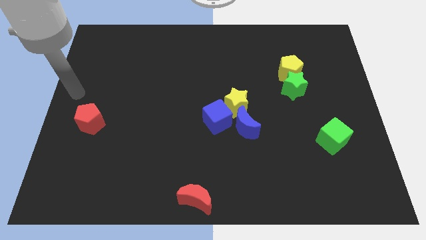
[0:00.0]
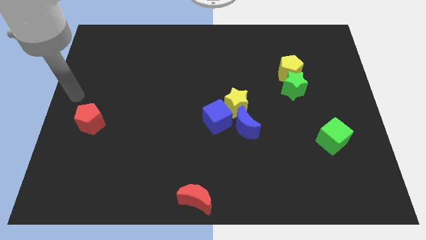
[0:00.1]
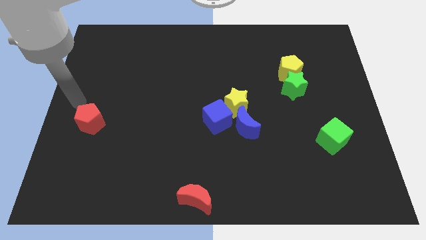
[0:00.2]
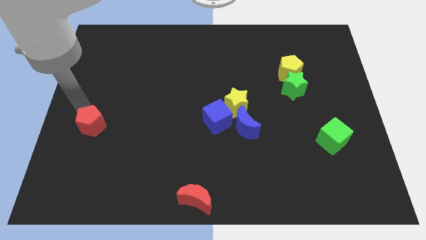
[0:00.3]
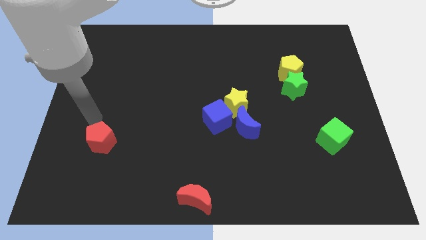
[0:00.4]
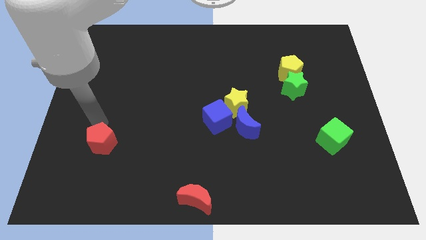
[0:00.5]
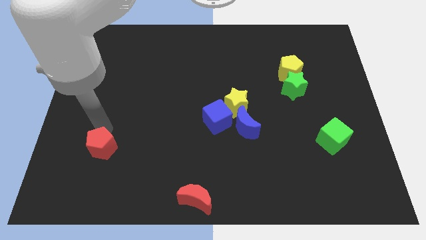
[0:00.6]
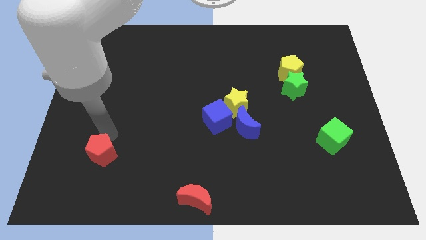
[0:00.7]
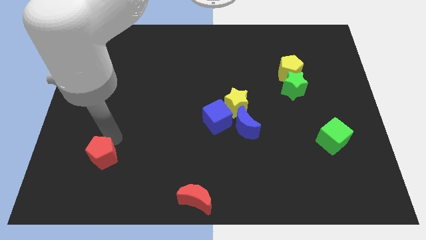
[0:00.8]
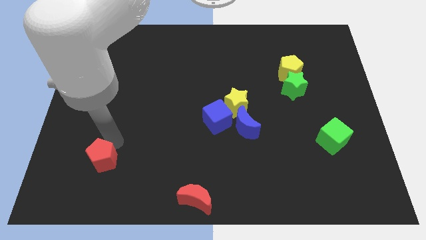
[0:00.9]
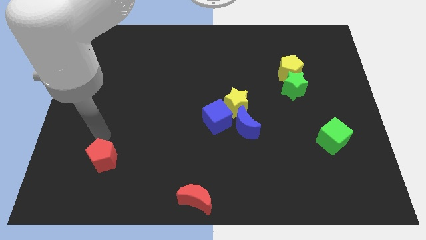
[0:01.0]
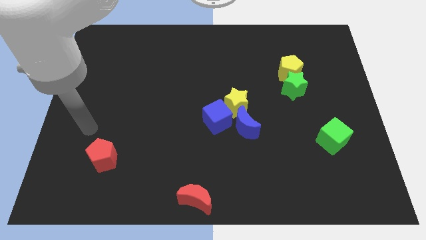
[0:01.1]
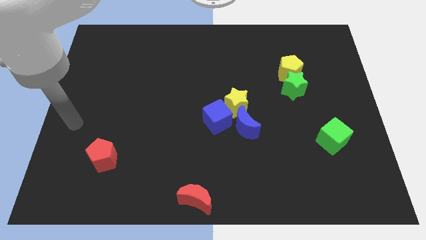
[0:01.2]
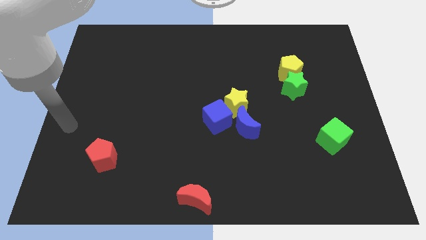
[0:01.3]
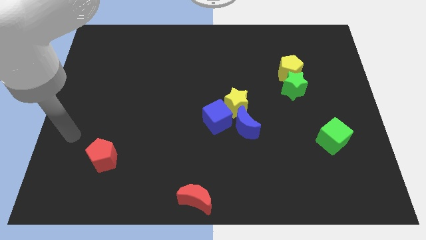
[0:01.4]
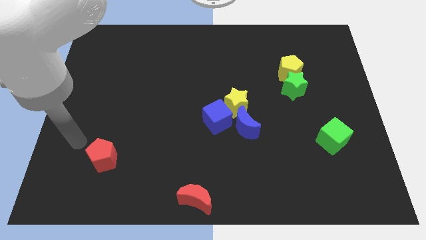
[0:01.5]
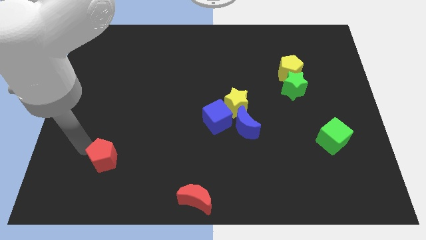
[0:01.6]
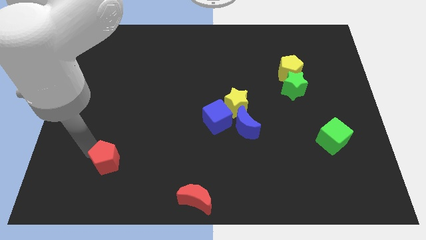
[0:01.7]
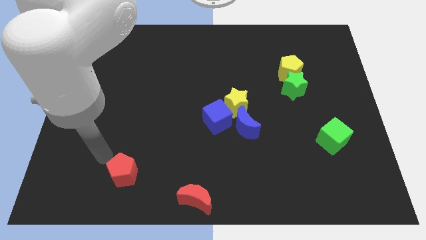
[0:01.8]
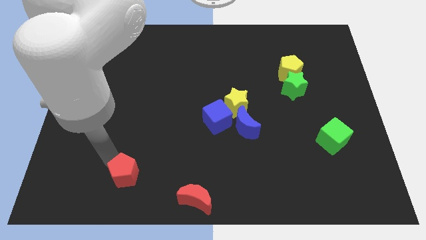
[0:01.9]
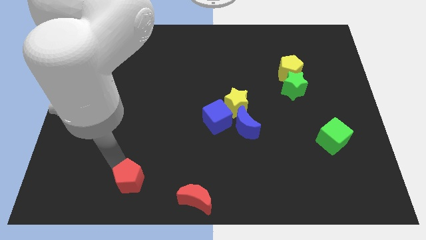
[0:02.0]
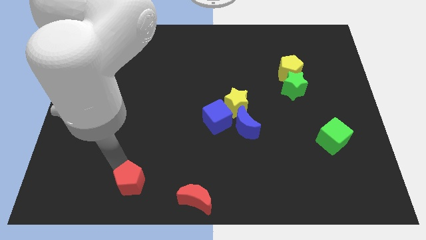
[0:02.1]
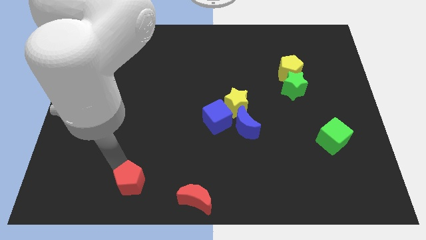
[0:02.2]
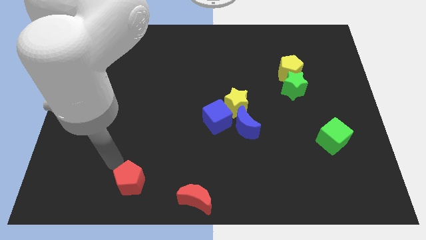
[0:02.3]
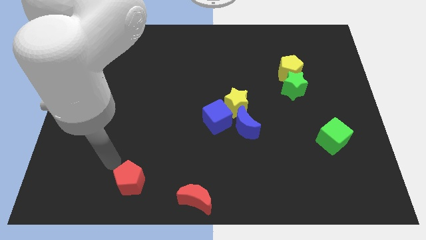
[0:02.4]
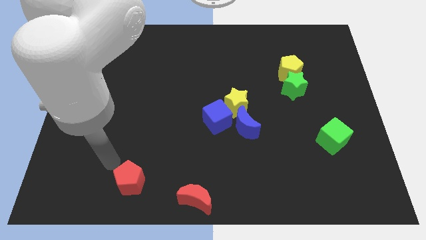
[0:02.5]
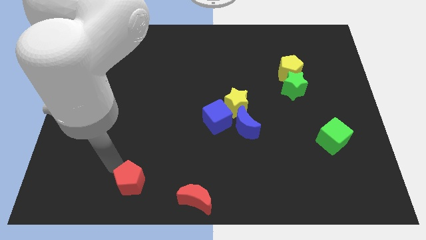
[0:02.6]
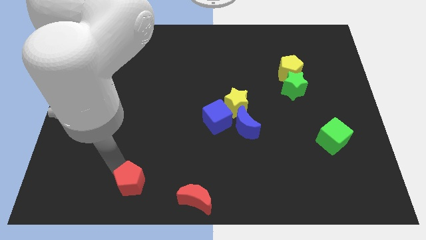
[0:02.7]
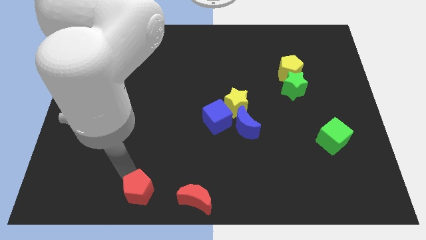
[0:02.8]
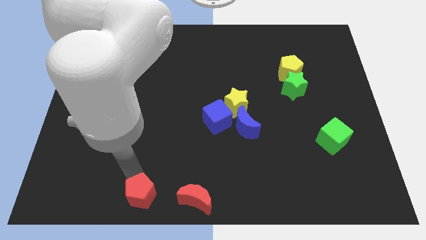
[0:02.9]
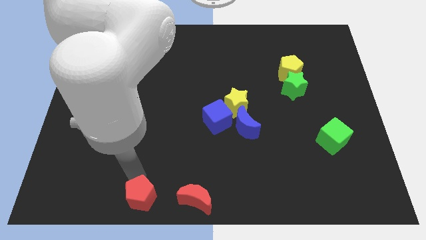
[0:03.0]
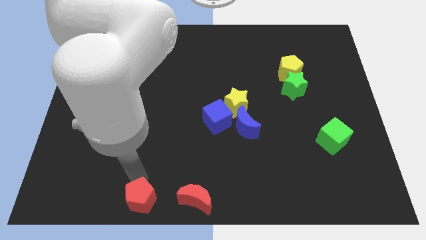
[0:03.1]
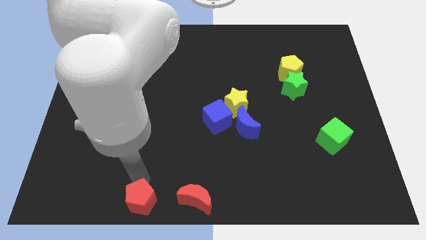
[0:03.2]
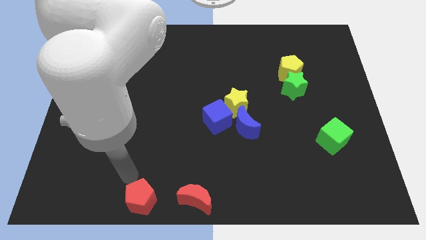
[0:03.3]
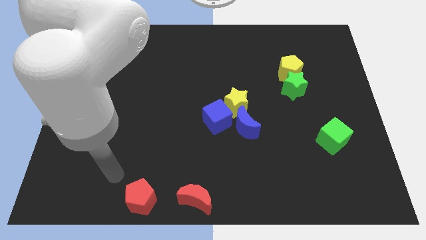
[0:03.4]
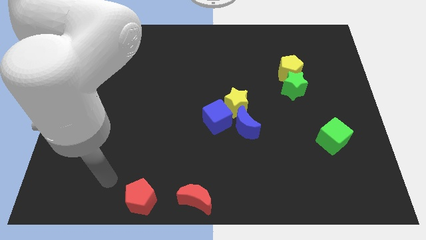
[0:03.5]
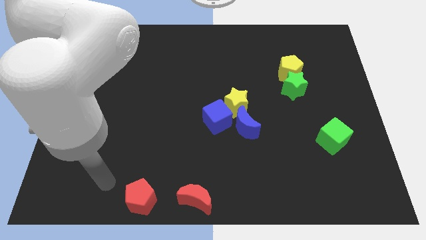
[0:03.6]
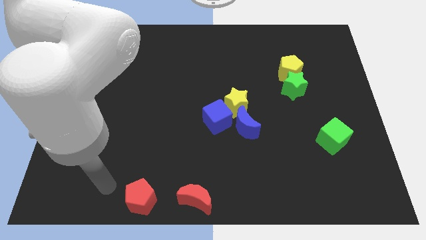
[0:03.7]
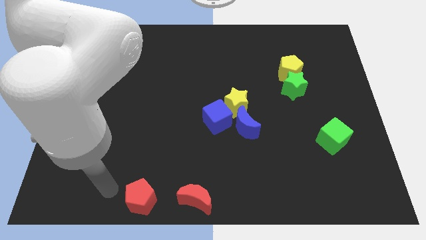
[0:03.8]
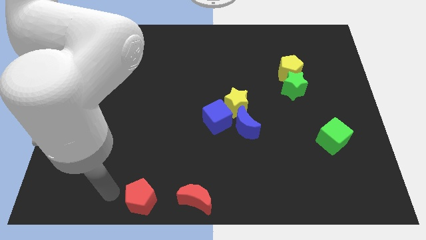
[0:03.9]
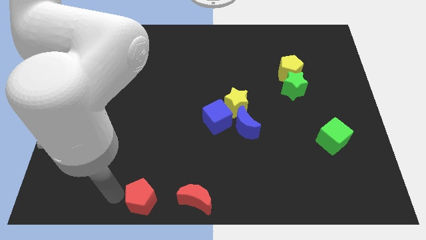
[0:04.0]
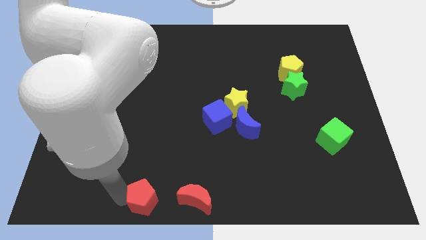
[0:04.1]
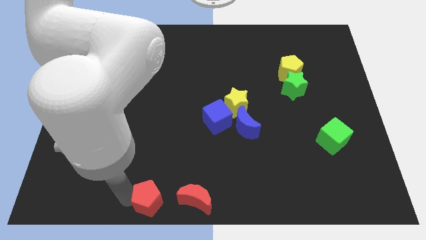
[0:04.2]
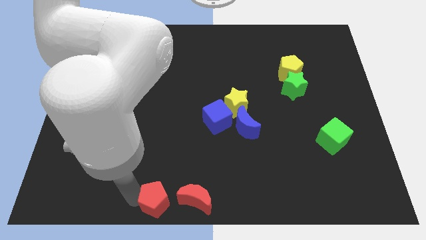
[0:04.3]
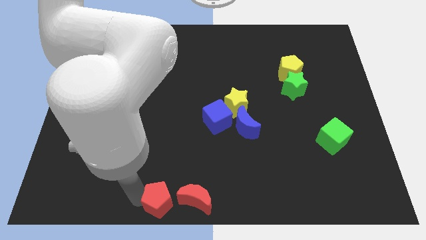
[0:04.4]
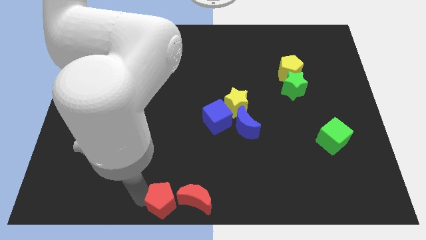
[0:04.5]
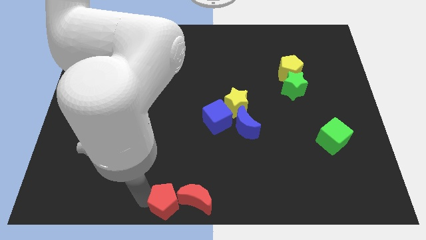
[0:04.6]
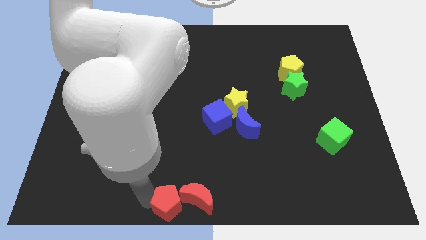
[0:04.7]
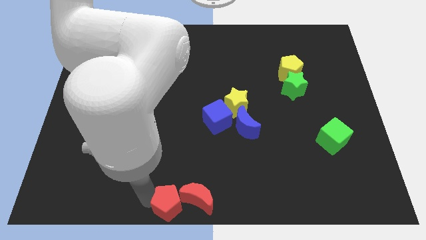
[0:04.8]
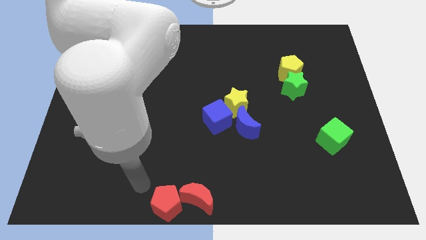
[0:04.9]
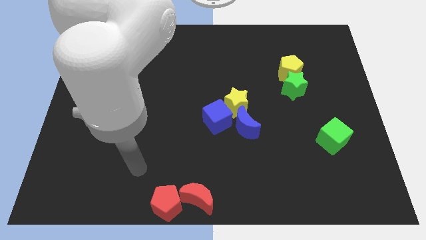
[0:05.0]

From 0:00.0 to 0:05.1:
put the red pentagon into red moon at the bottom center

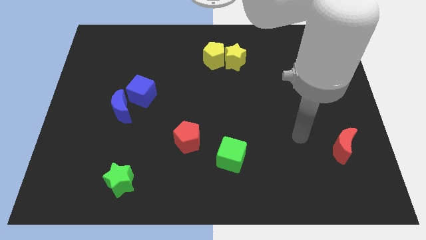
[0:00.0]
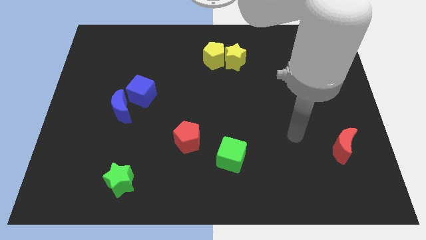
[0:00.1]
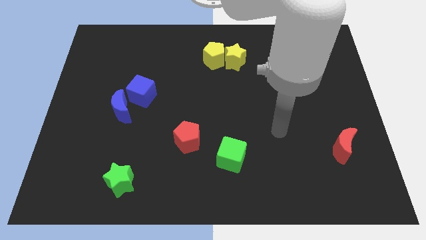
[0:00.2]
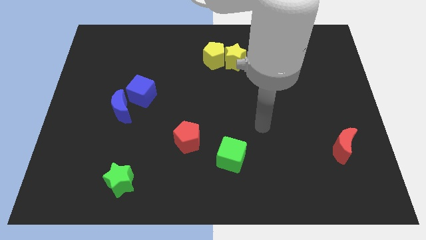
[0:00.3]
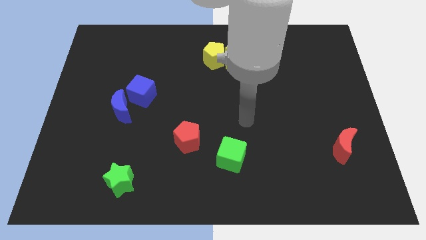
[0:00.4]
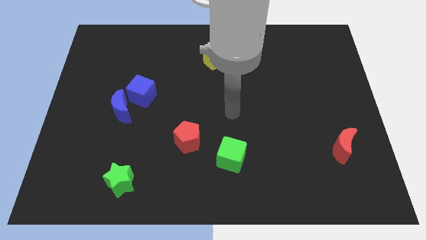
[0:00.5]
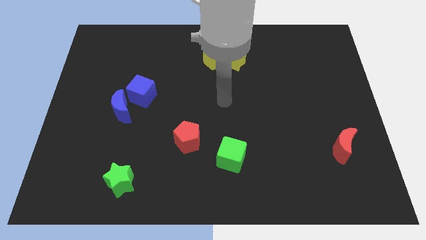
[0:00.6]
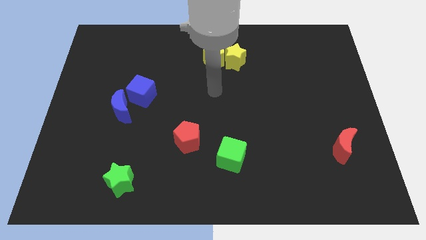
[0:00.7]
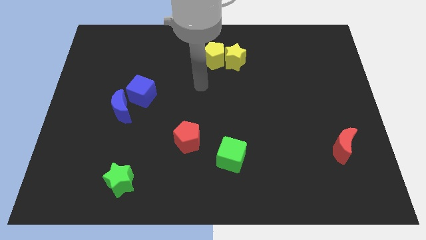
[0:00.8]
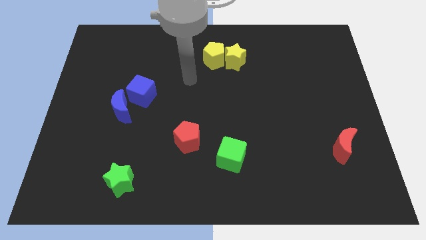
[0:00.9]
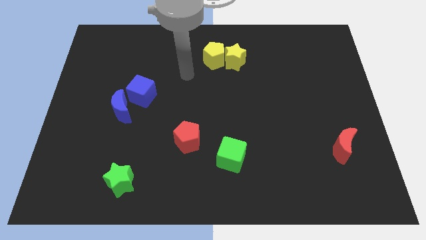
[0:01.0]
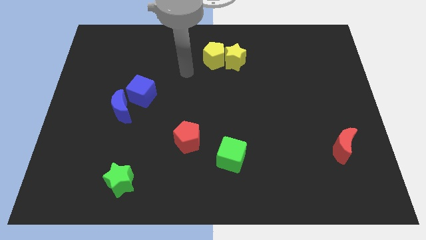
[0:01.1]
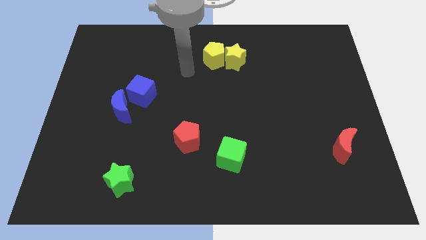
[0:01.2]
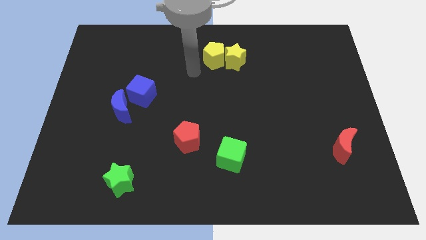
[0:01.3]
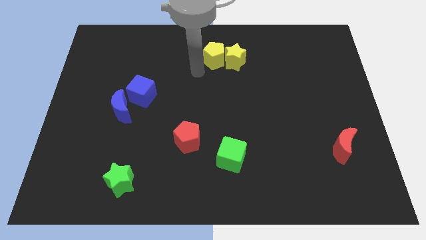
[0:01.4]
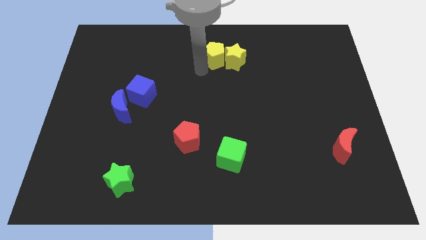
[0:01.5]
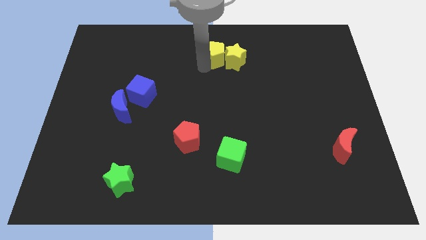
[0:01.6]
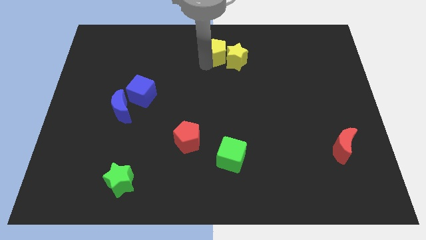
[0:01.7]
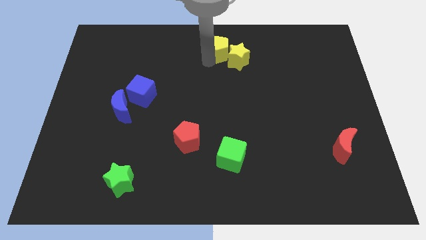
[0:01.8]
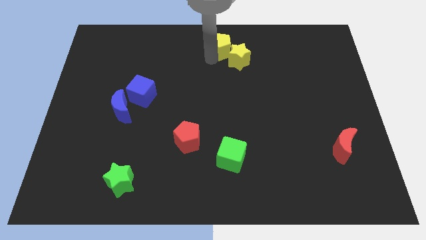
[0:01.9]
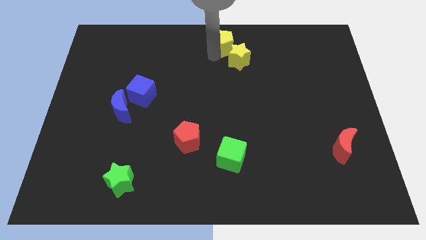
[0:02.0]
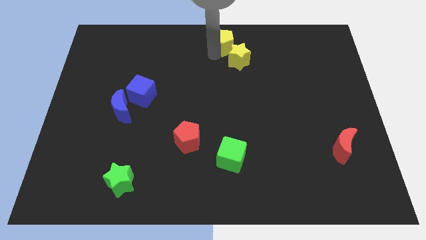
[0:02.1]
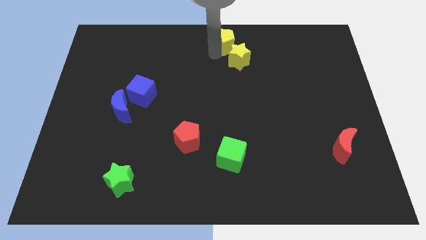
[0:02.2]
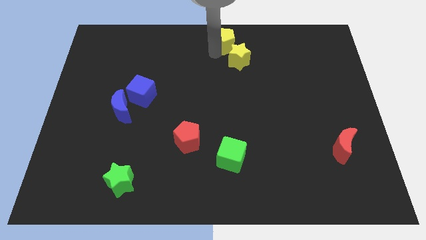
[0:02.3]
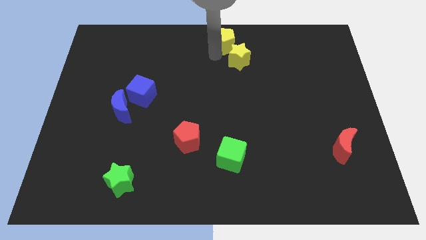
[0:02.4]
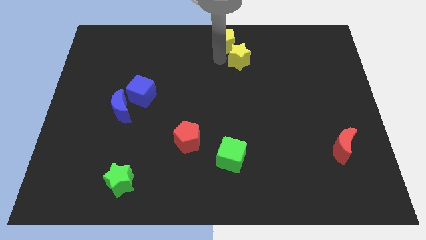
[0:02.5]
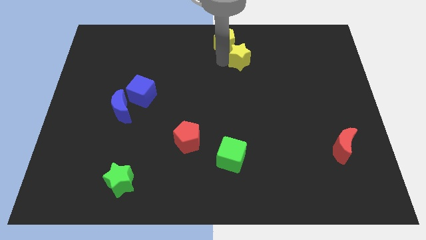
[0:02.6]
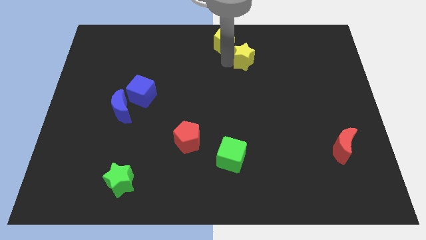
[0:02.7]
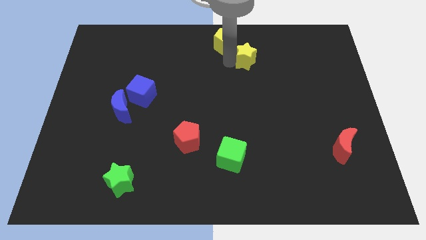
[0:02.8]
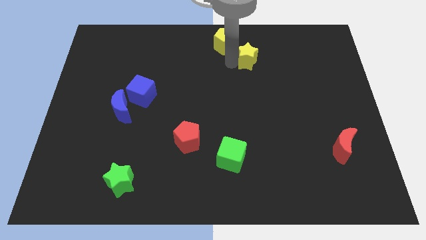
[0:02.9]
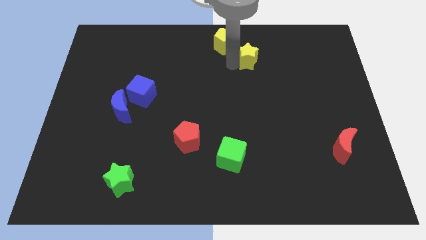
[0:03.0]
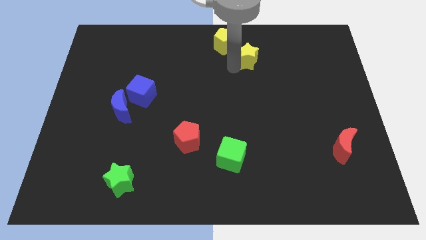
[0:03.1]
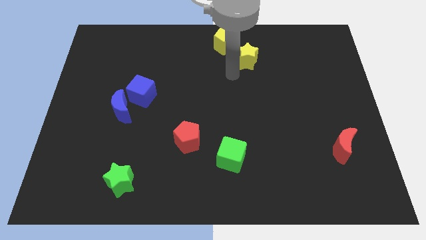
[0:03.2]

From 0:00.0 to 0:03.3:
separate yellow blocks away from each other

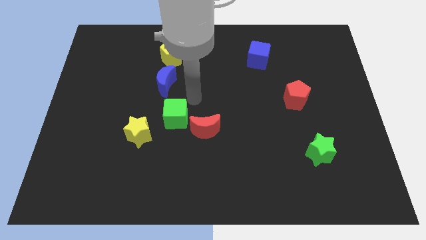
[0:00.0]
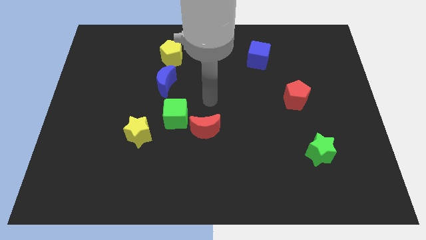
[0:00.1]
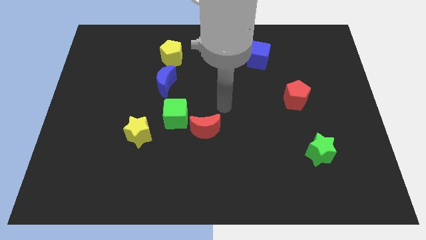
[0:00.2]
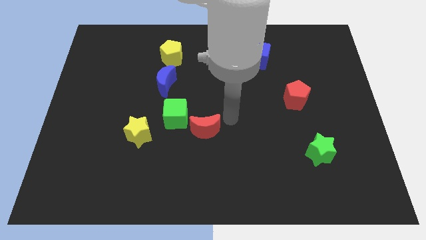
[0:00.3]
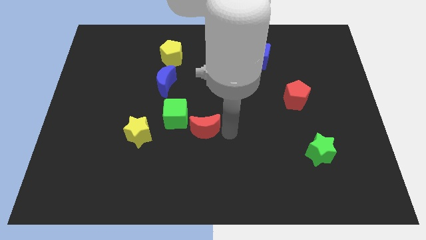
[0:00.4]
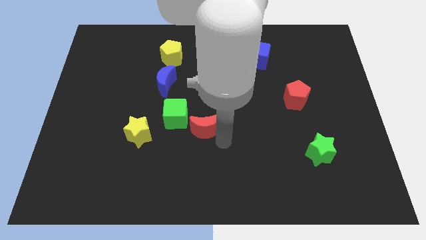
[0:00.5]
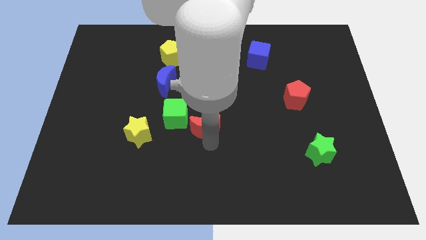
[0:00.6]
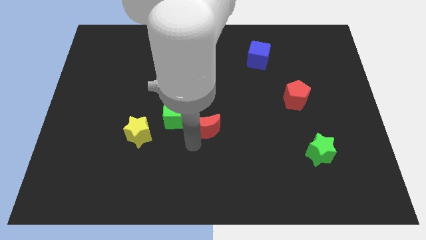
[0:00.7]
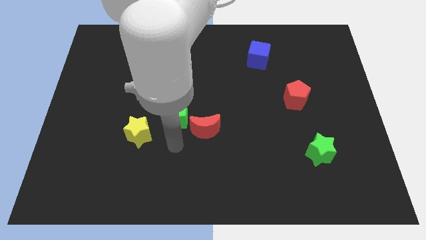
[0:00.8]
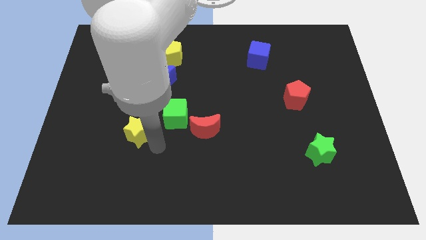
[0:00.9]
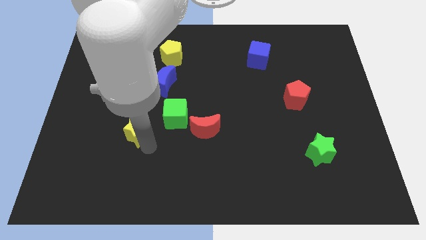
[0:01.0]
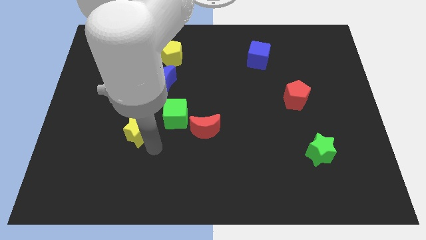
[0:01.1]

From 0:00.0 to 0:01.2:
point your arm below yellow star
